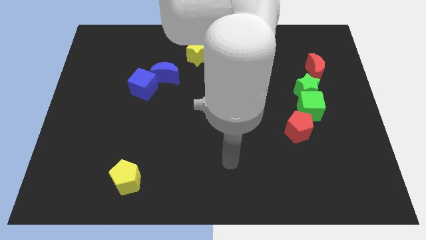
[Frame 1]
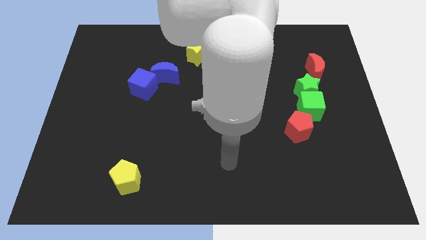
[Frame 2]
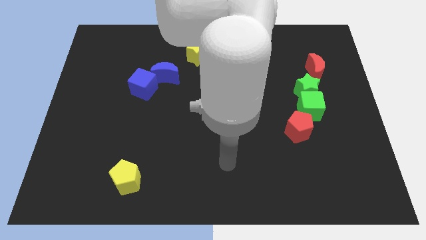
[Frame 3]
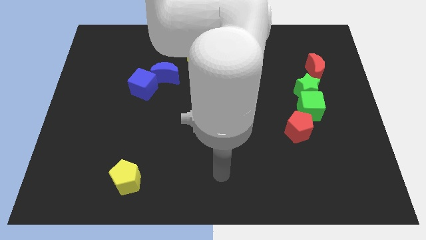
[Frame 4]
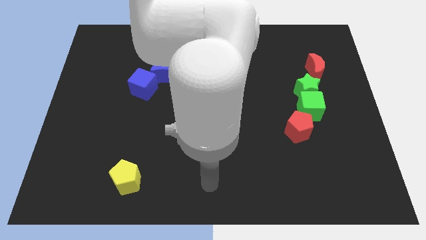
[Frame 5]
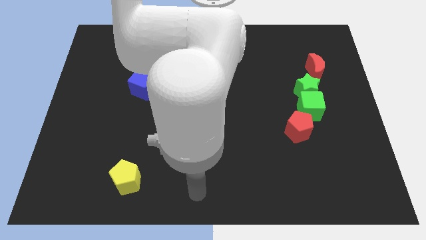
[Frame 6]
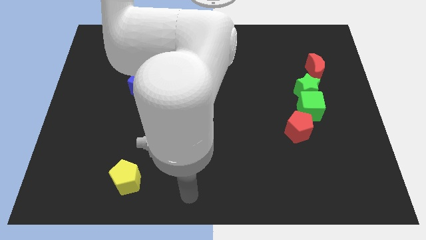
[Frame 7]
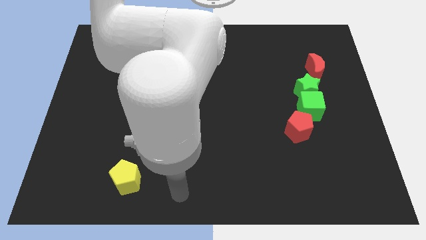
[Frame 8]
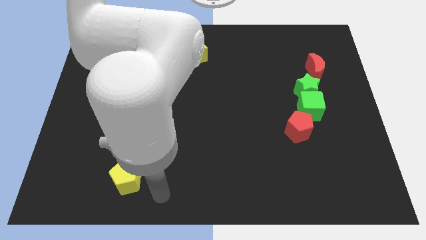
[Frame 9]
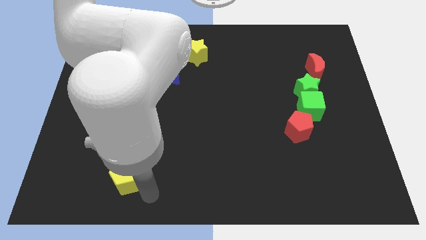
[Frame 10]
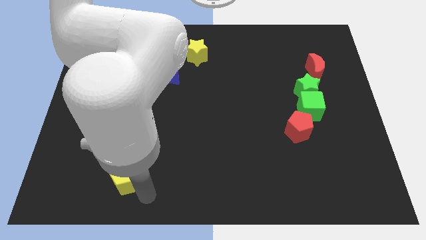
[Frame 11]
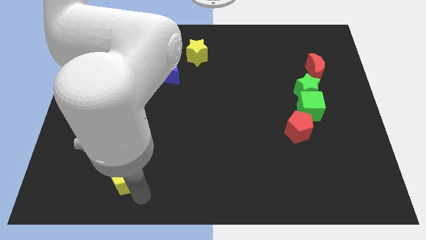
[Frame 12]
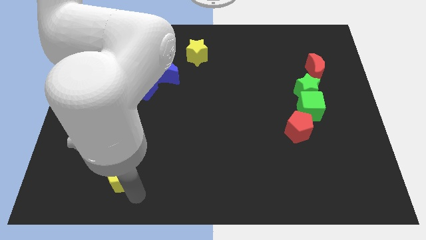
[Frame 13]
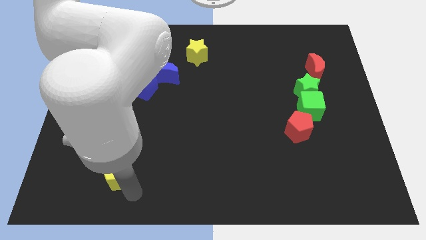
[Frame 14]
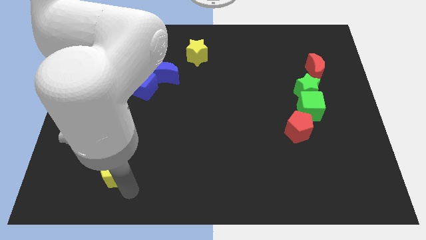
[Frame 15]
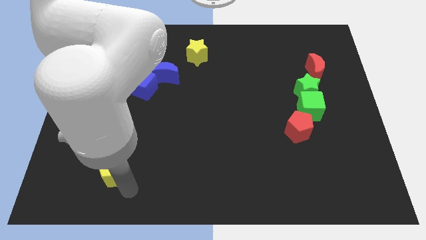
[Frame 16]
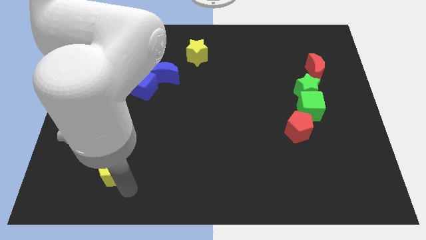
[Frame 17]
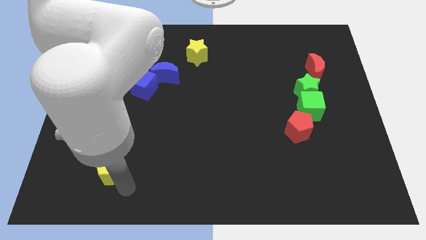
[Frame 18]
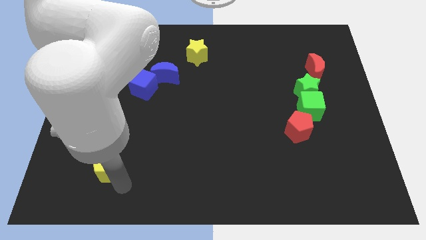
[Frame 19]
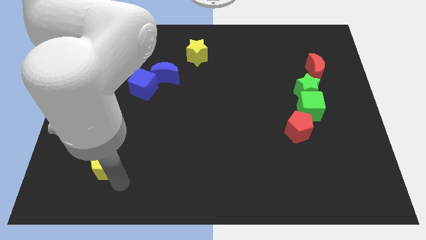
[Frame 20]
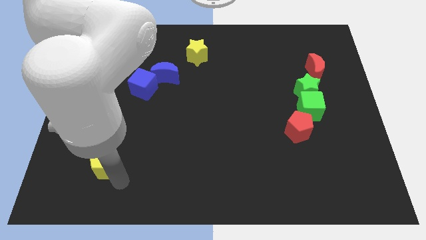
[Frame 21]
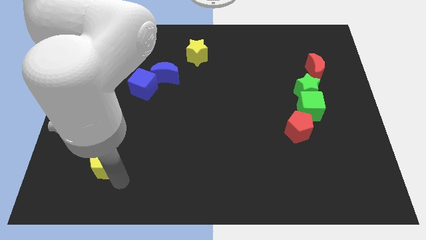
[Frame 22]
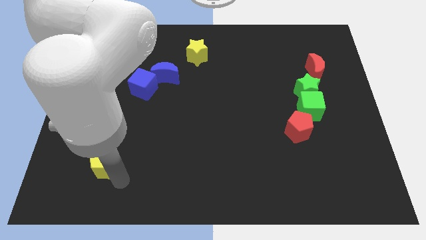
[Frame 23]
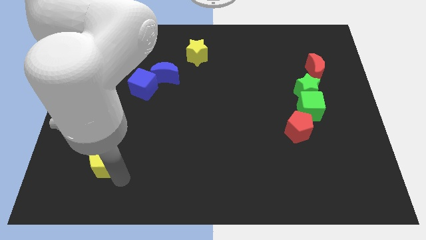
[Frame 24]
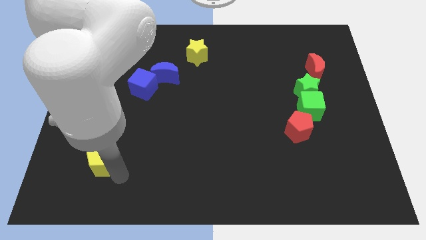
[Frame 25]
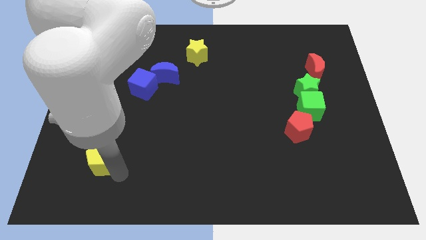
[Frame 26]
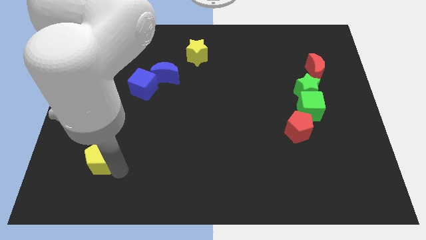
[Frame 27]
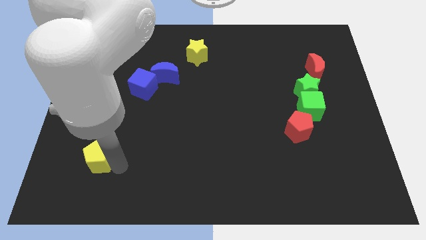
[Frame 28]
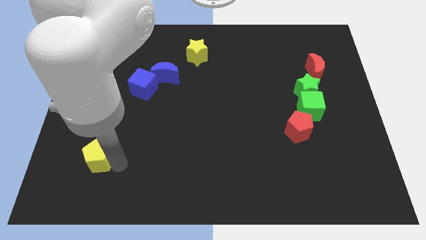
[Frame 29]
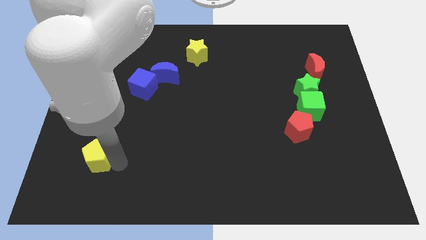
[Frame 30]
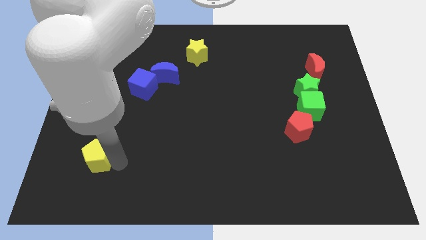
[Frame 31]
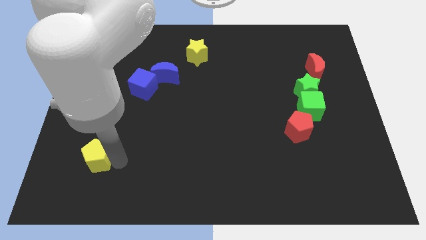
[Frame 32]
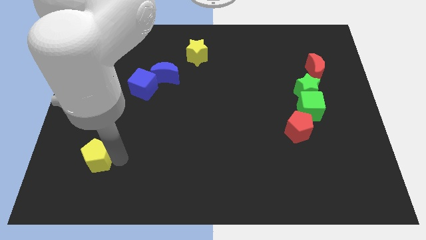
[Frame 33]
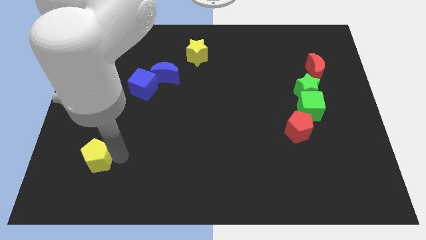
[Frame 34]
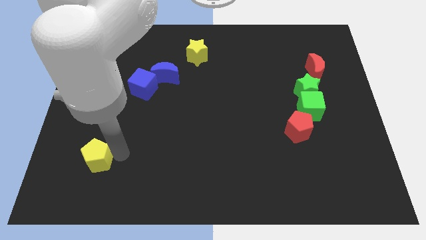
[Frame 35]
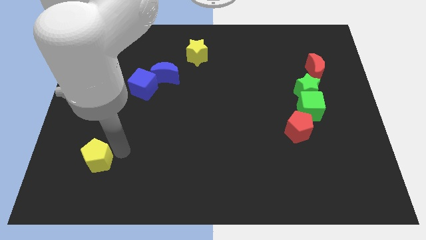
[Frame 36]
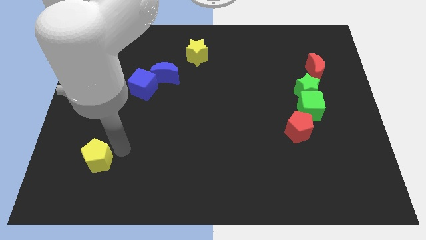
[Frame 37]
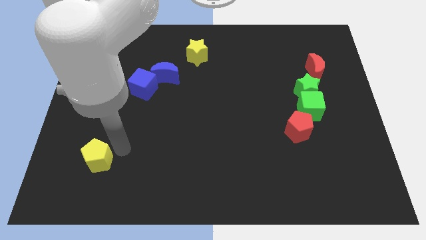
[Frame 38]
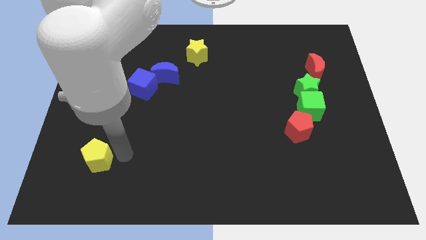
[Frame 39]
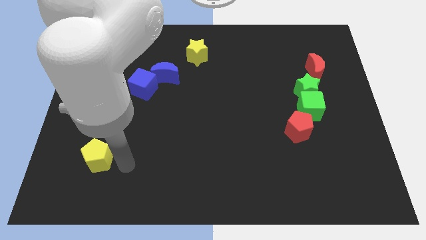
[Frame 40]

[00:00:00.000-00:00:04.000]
push the yellow pentagon to the left side of the board

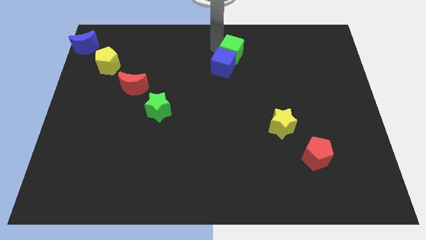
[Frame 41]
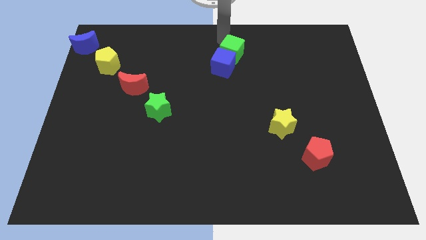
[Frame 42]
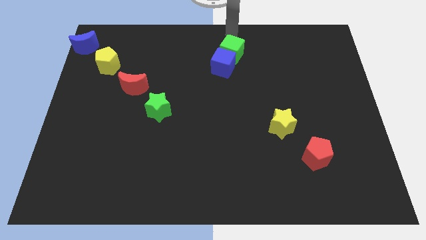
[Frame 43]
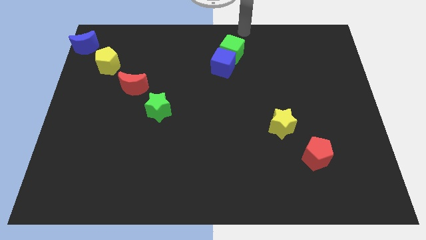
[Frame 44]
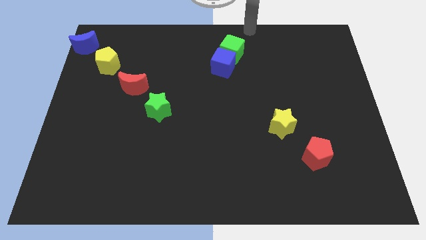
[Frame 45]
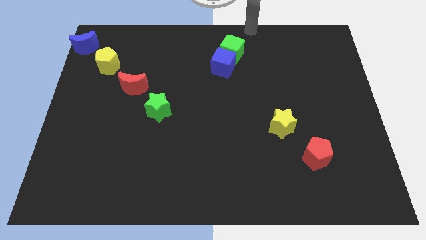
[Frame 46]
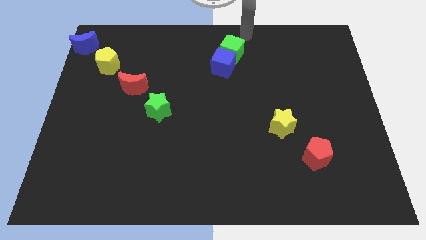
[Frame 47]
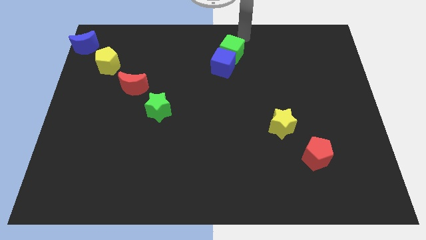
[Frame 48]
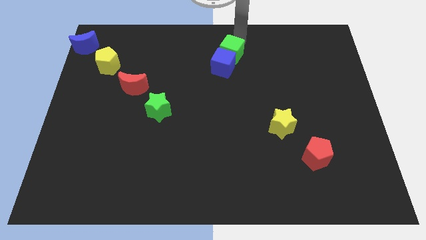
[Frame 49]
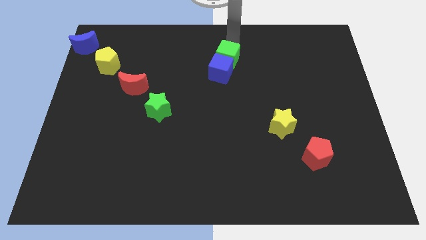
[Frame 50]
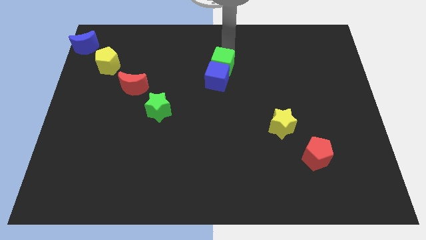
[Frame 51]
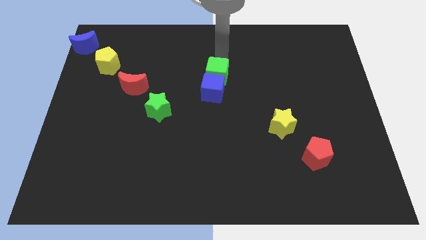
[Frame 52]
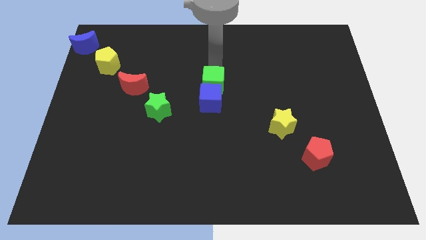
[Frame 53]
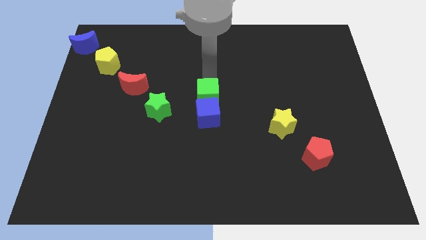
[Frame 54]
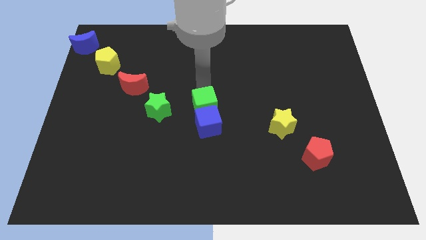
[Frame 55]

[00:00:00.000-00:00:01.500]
place the green cube and blue cube to the right of the green star

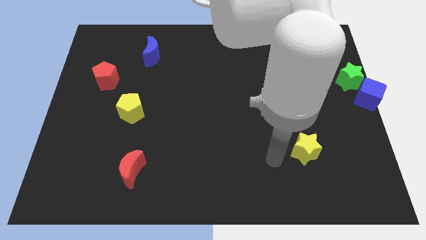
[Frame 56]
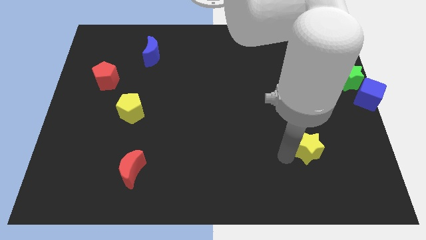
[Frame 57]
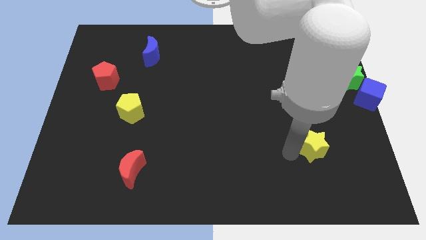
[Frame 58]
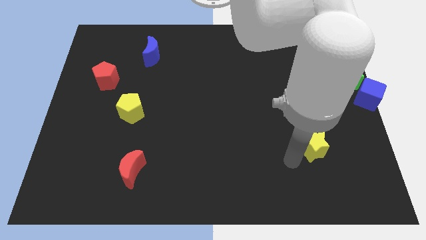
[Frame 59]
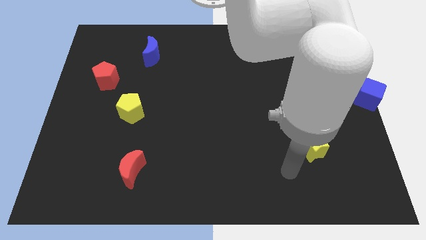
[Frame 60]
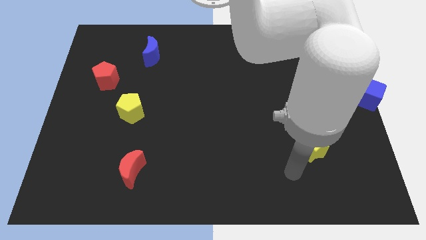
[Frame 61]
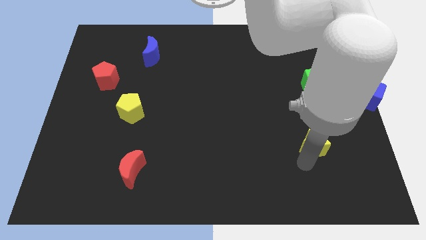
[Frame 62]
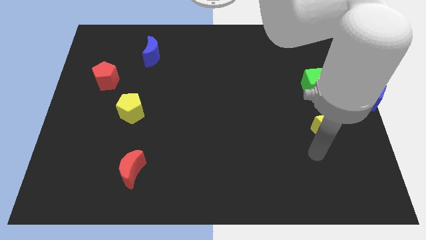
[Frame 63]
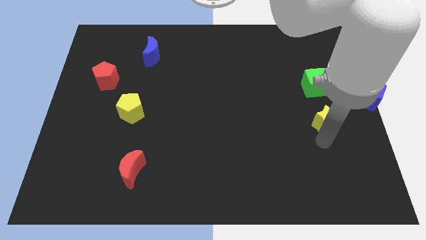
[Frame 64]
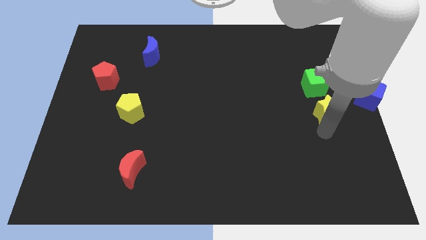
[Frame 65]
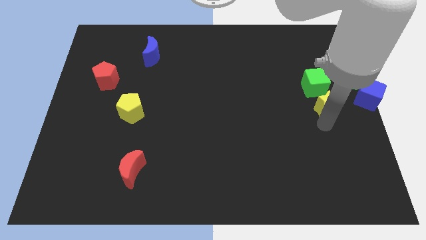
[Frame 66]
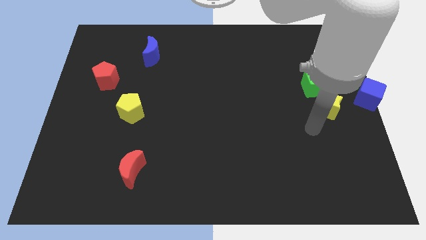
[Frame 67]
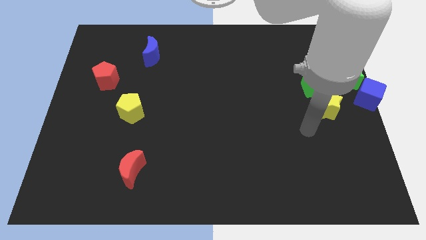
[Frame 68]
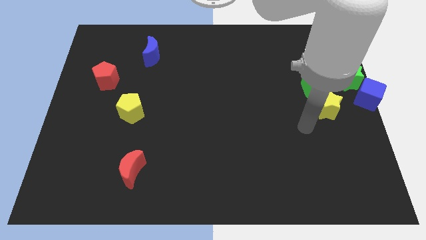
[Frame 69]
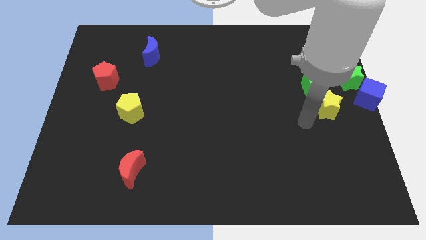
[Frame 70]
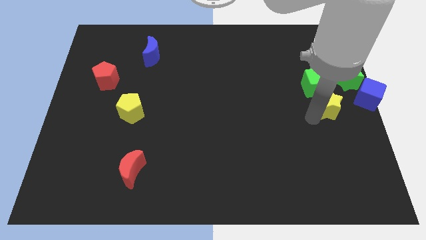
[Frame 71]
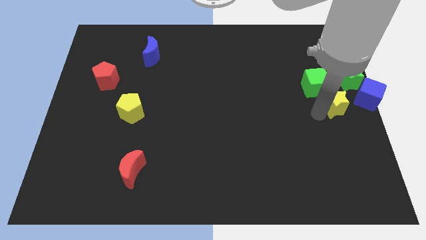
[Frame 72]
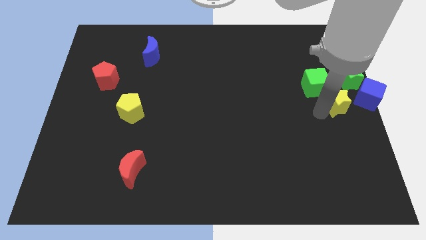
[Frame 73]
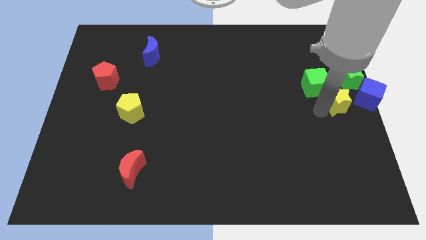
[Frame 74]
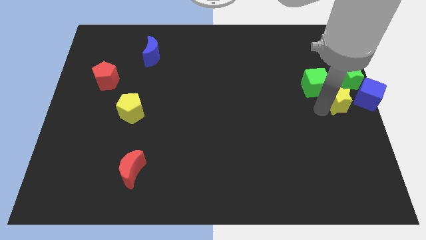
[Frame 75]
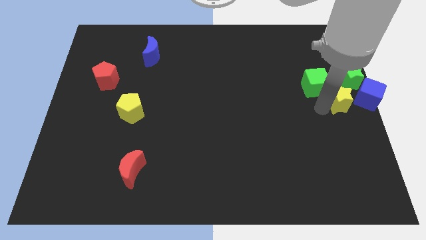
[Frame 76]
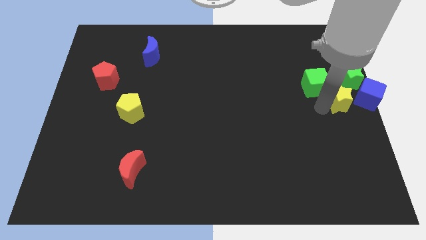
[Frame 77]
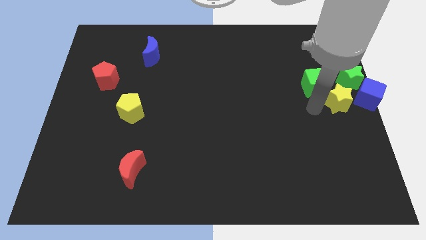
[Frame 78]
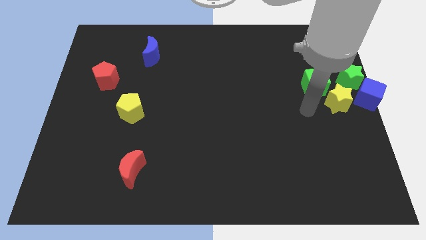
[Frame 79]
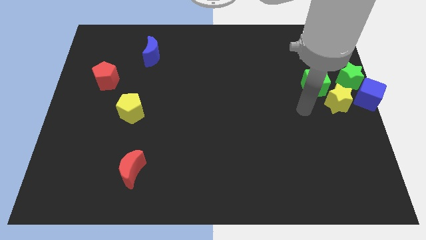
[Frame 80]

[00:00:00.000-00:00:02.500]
move the yellow star to the left of the blue cube

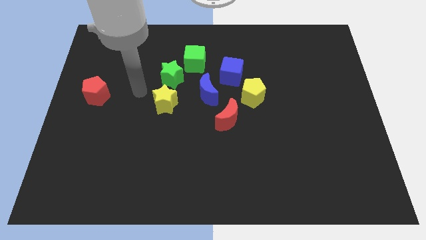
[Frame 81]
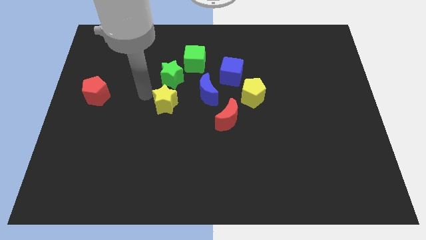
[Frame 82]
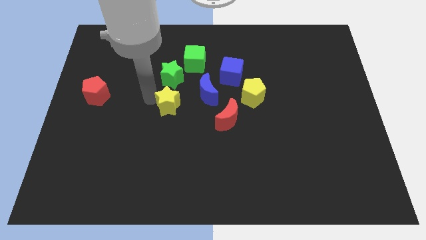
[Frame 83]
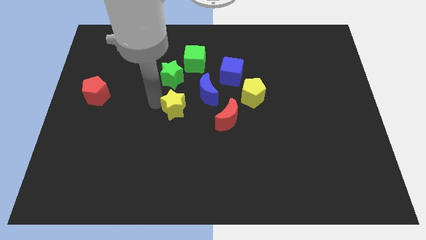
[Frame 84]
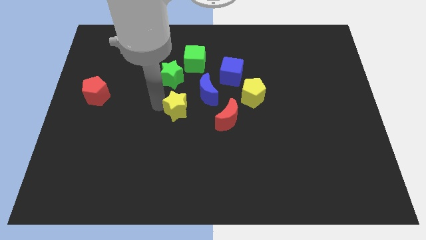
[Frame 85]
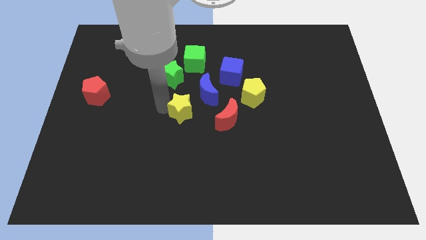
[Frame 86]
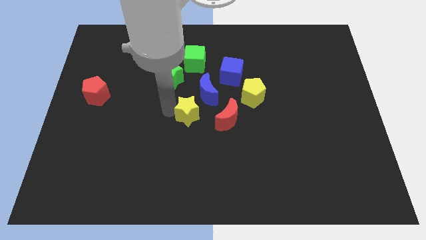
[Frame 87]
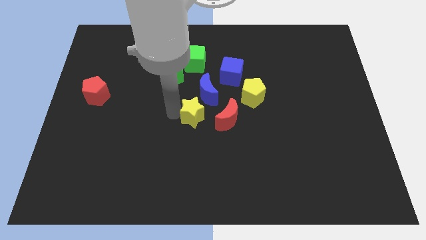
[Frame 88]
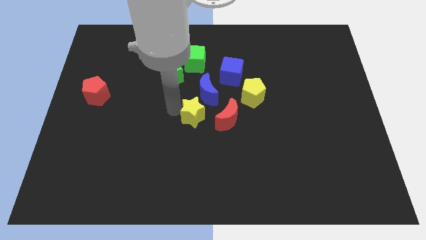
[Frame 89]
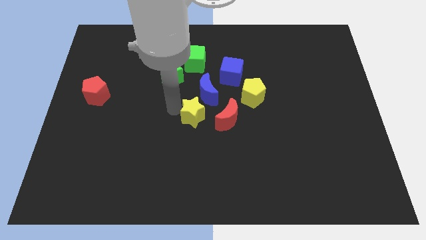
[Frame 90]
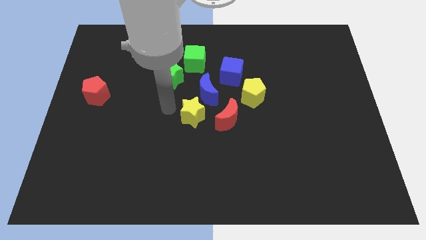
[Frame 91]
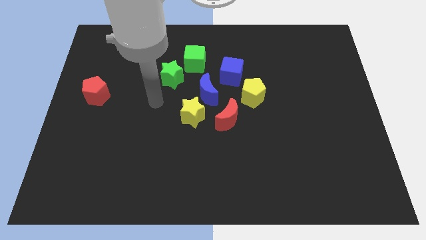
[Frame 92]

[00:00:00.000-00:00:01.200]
push the green cube diagonal to the green star
